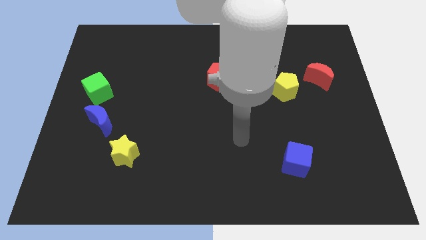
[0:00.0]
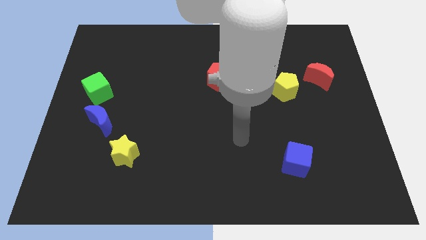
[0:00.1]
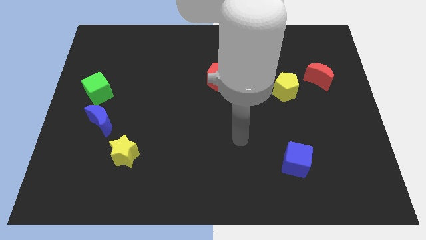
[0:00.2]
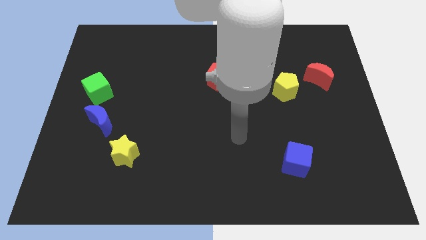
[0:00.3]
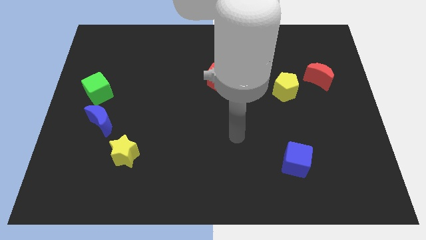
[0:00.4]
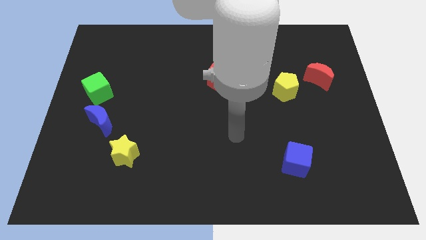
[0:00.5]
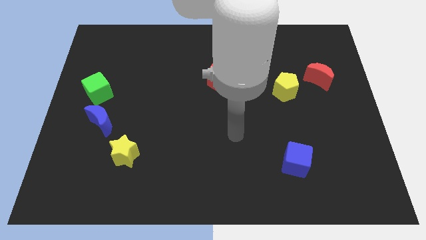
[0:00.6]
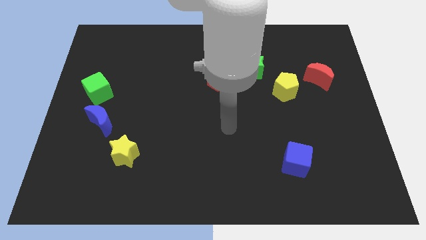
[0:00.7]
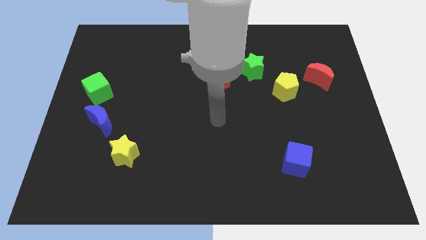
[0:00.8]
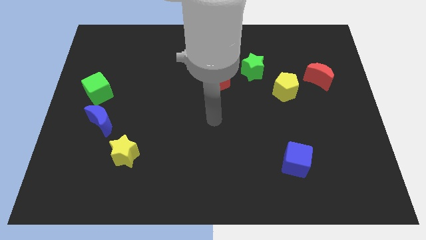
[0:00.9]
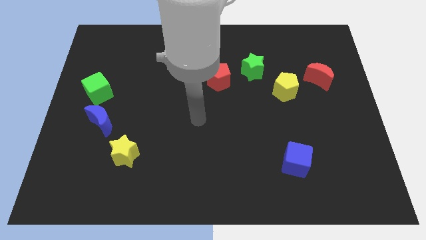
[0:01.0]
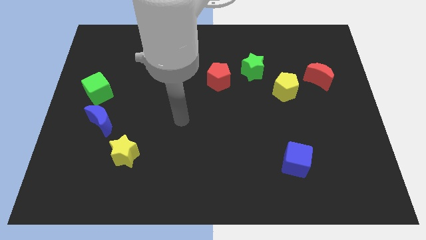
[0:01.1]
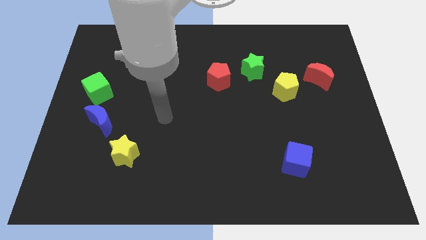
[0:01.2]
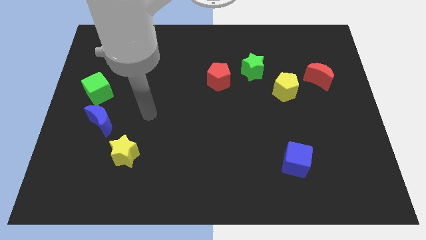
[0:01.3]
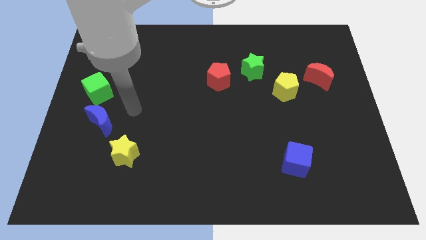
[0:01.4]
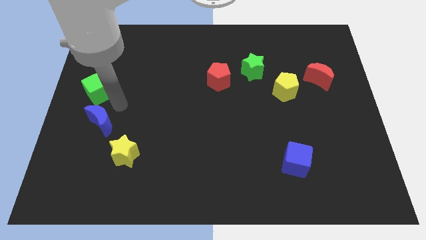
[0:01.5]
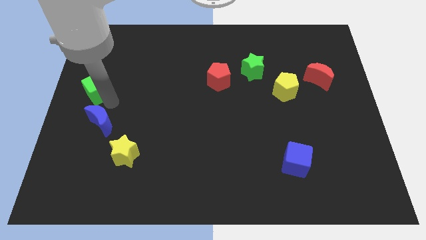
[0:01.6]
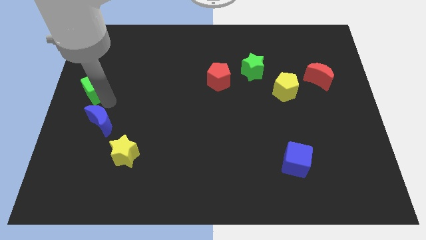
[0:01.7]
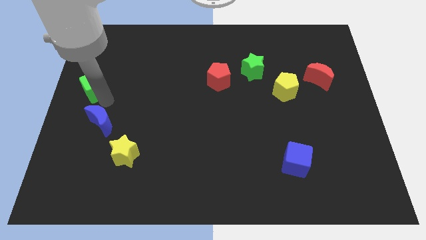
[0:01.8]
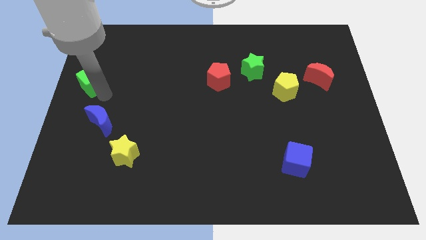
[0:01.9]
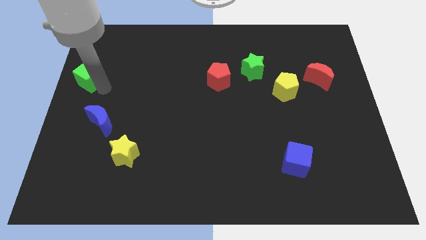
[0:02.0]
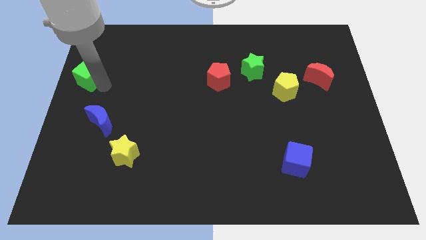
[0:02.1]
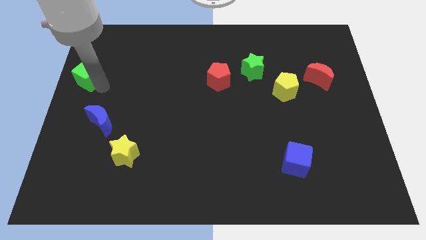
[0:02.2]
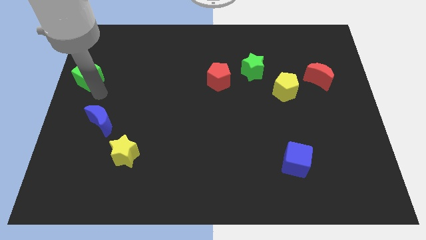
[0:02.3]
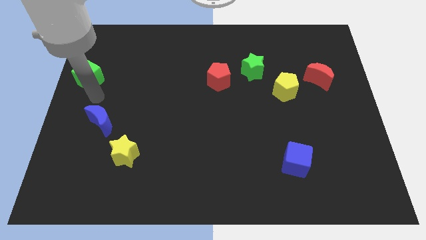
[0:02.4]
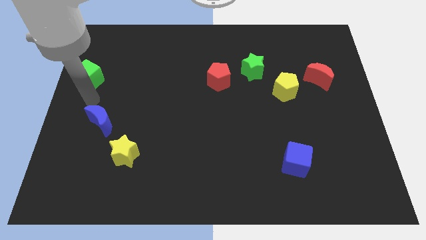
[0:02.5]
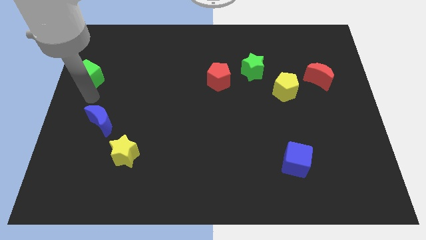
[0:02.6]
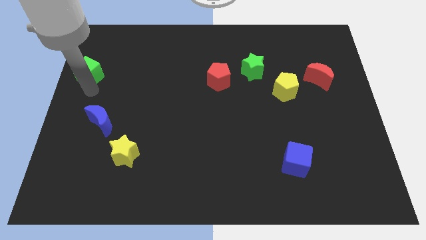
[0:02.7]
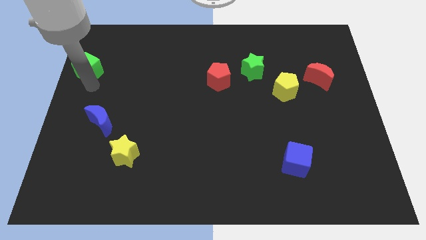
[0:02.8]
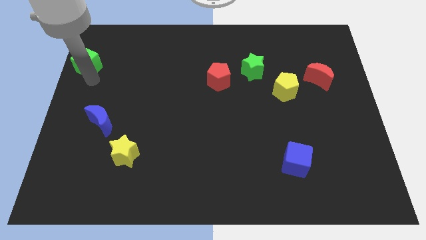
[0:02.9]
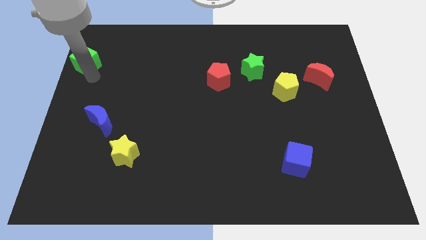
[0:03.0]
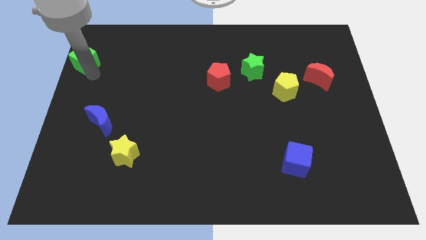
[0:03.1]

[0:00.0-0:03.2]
separate the green cube from the blue crescent

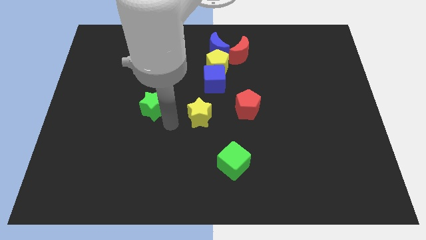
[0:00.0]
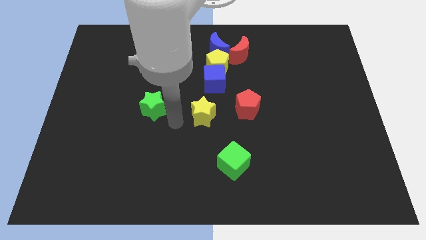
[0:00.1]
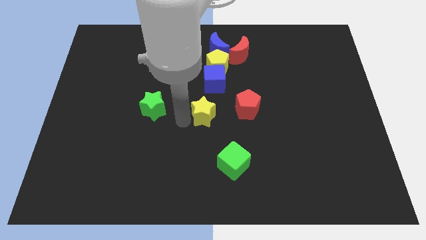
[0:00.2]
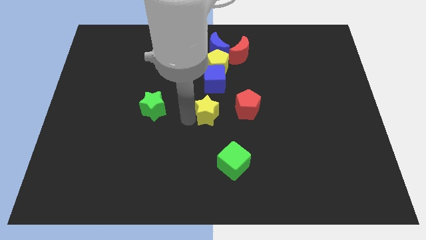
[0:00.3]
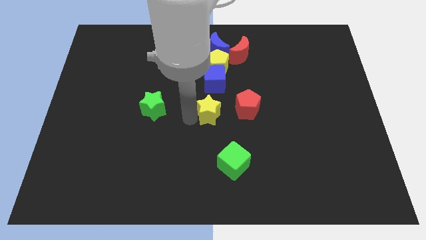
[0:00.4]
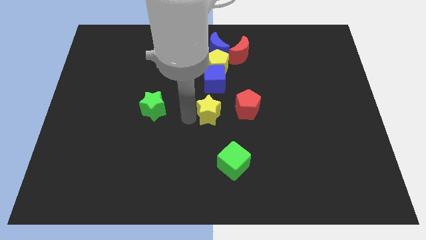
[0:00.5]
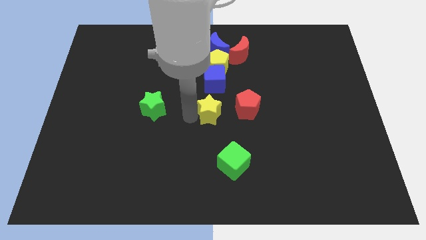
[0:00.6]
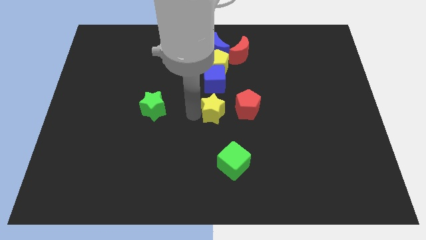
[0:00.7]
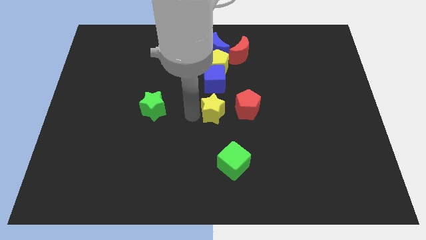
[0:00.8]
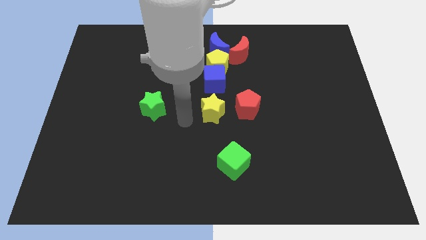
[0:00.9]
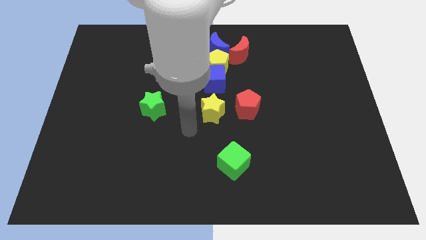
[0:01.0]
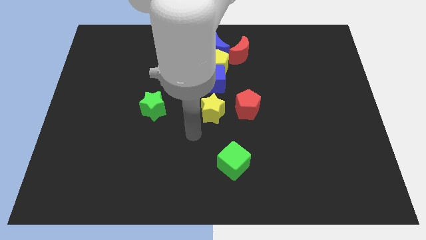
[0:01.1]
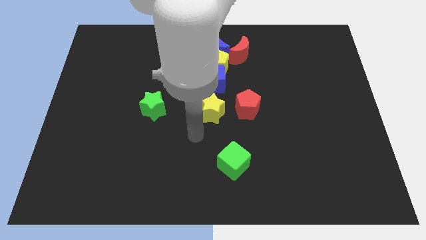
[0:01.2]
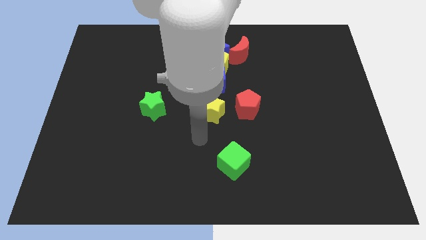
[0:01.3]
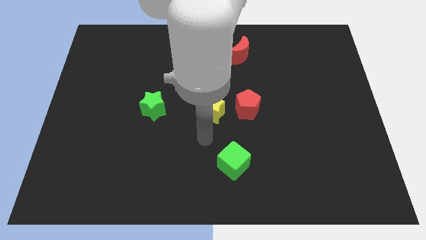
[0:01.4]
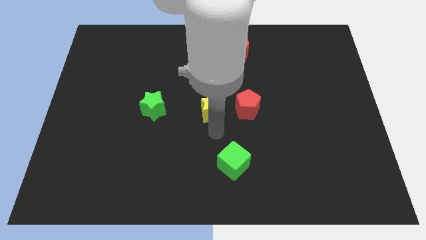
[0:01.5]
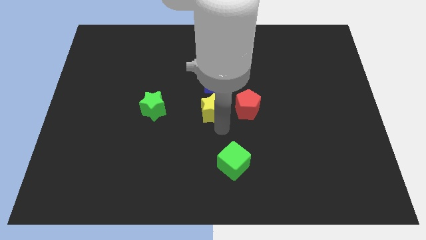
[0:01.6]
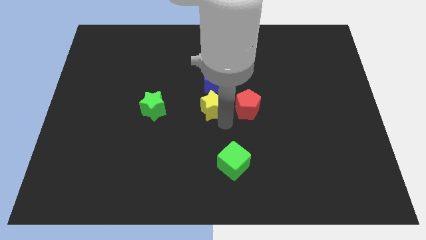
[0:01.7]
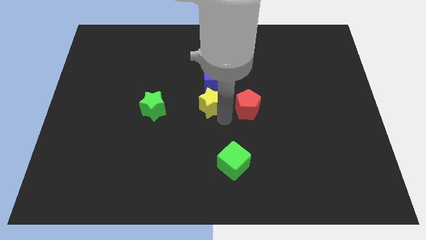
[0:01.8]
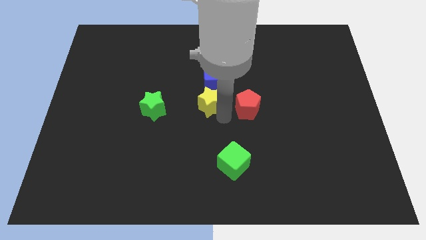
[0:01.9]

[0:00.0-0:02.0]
push the yellow star below blue cube

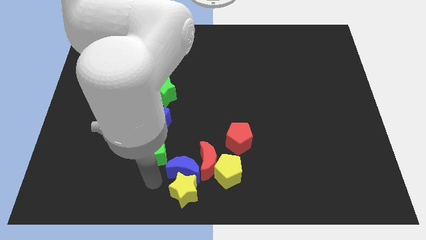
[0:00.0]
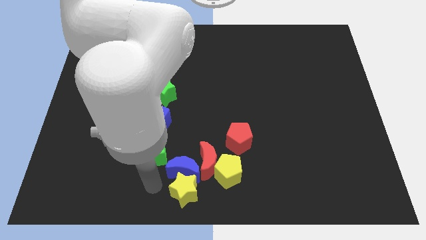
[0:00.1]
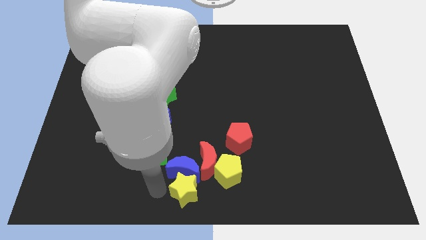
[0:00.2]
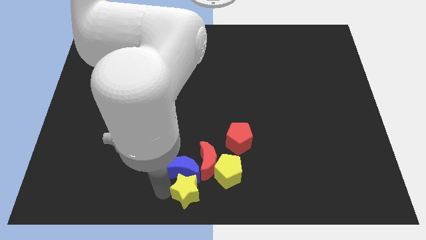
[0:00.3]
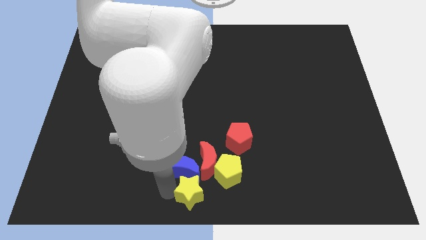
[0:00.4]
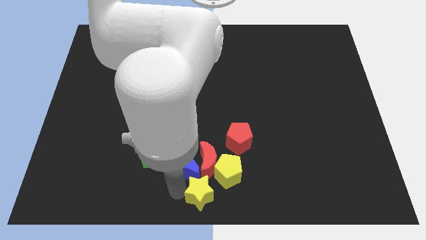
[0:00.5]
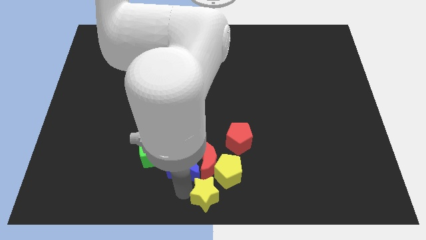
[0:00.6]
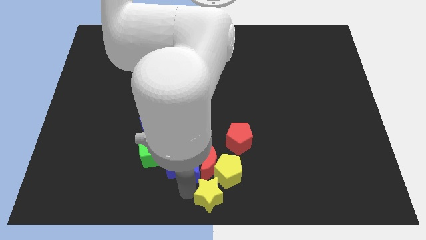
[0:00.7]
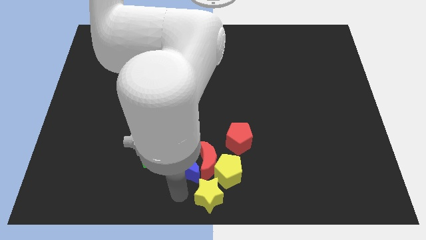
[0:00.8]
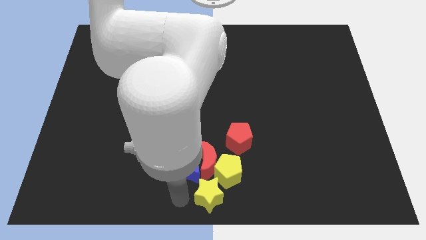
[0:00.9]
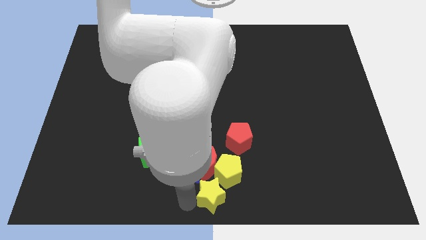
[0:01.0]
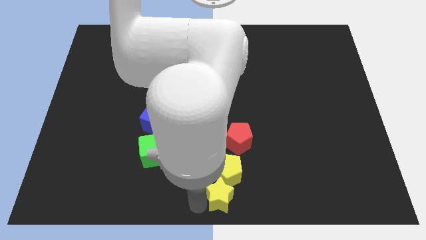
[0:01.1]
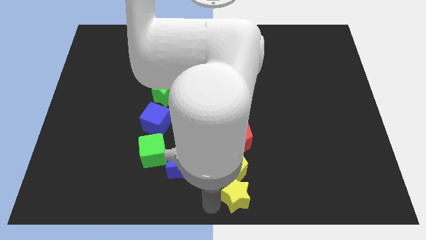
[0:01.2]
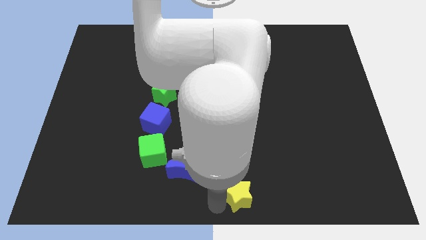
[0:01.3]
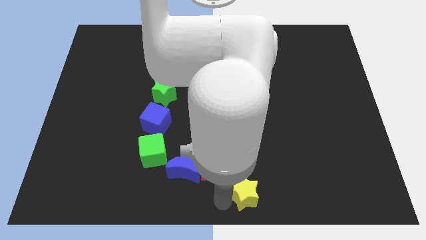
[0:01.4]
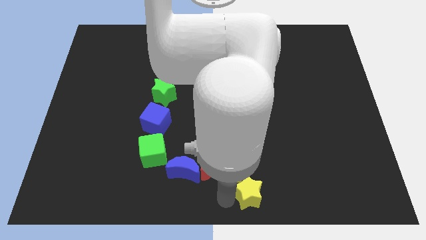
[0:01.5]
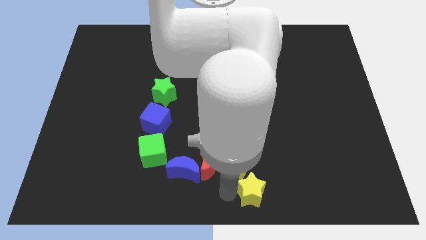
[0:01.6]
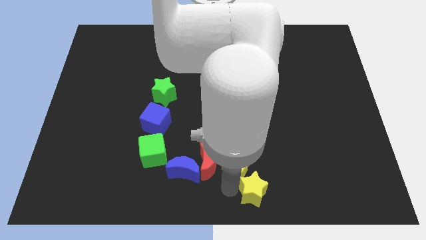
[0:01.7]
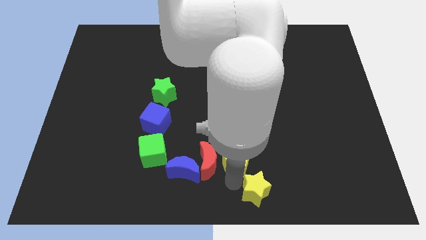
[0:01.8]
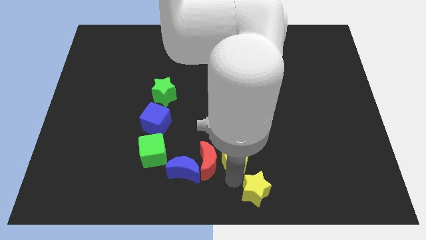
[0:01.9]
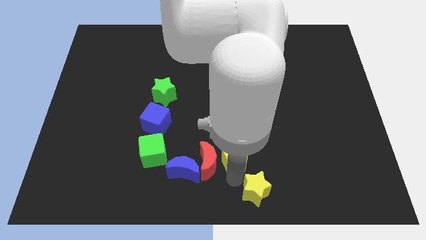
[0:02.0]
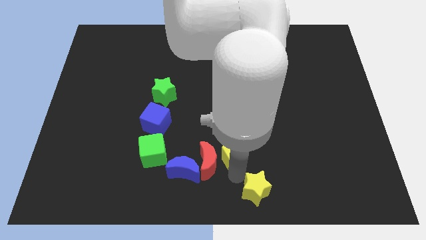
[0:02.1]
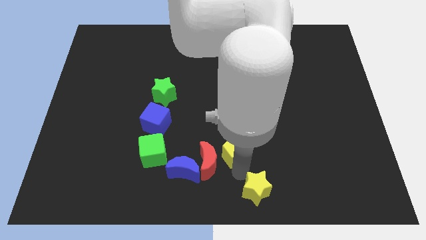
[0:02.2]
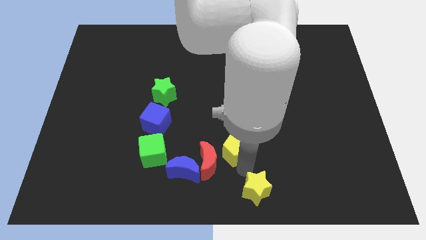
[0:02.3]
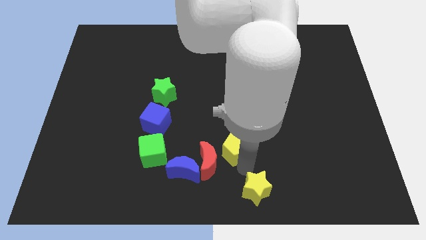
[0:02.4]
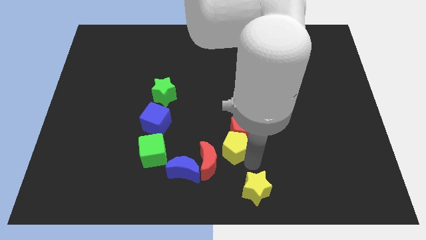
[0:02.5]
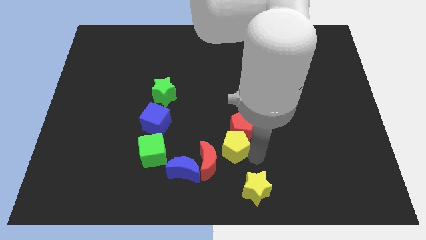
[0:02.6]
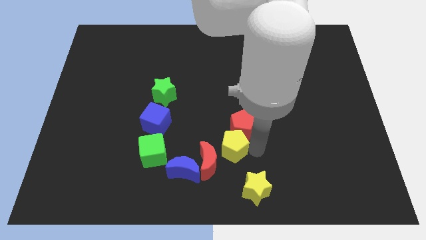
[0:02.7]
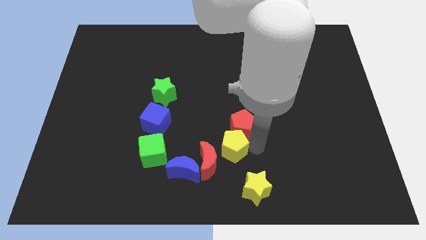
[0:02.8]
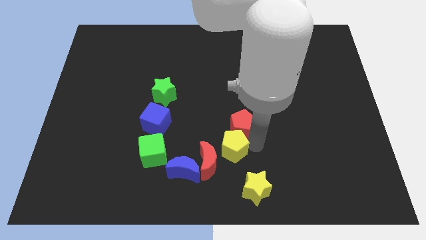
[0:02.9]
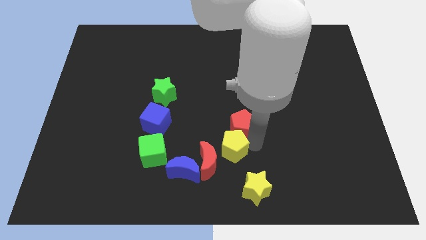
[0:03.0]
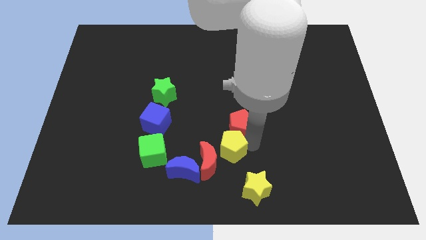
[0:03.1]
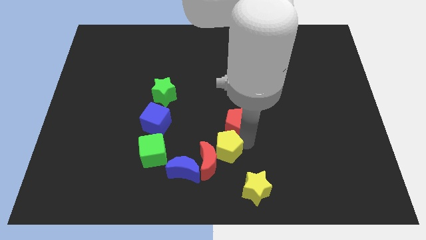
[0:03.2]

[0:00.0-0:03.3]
place the yellow pentagon to the top right of the red moon

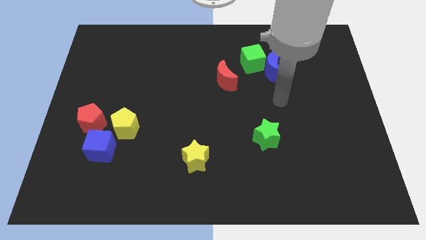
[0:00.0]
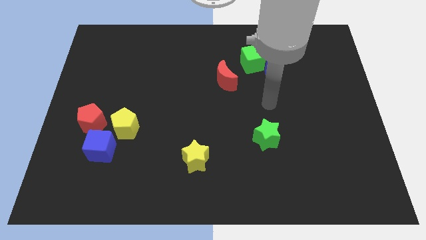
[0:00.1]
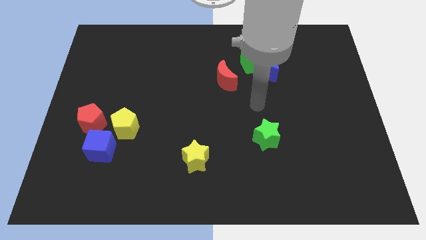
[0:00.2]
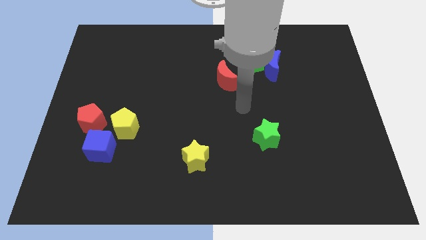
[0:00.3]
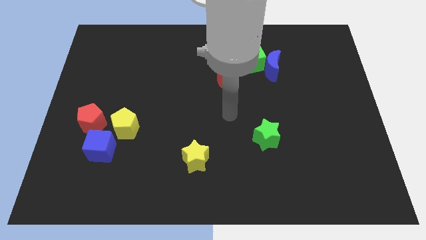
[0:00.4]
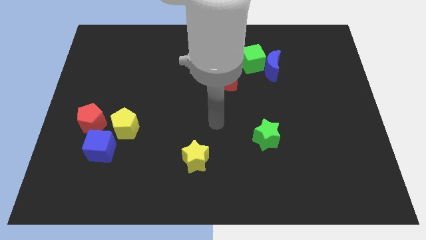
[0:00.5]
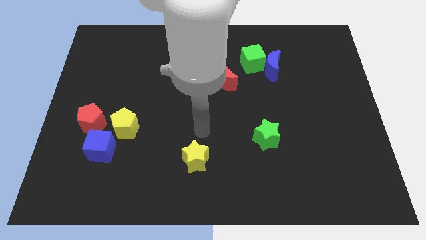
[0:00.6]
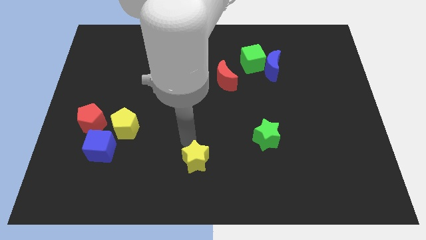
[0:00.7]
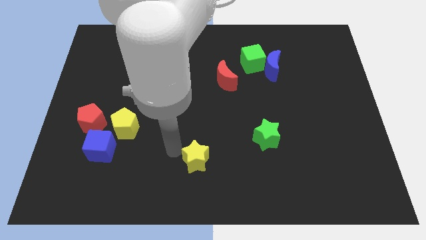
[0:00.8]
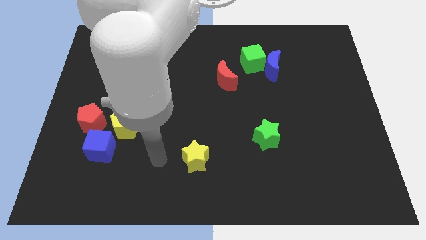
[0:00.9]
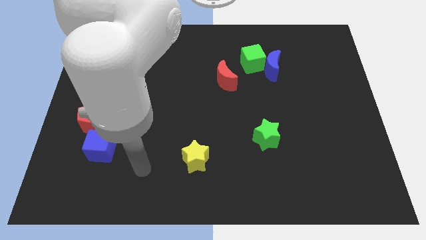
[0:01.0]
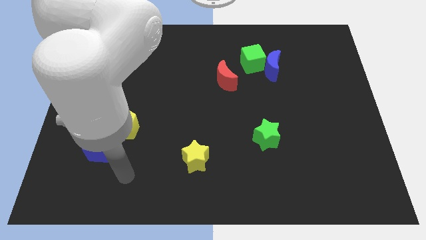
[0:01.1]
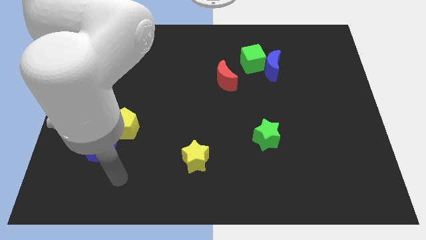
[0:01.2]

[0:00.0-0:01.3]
place your hand vertically below the yellow pentagon
